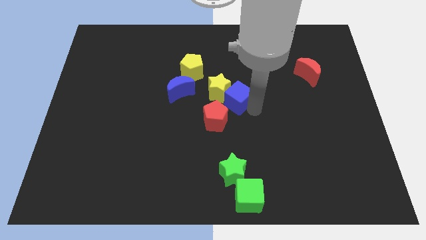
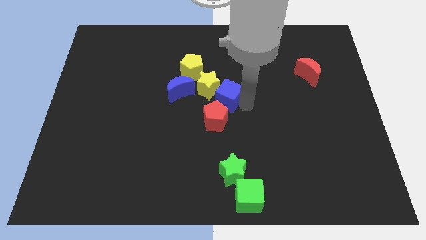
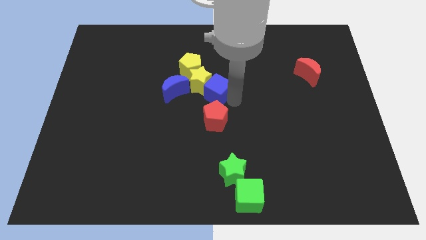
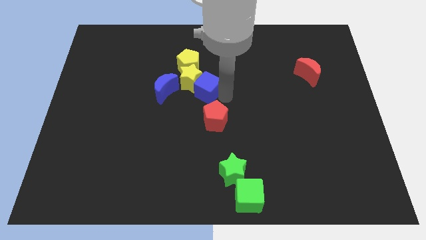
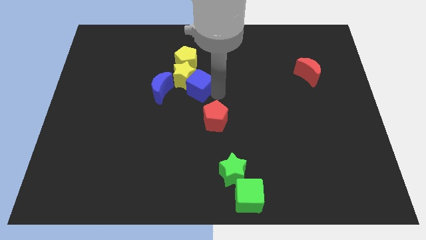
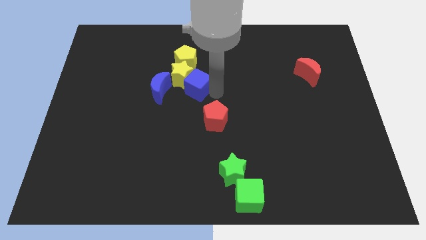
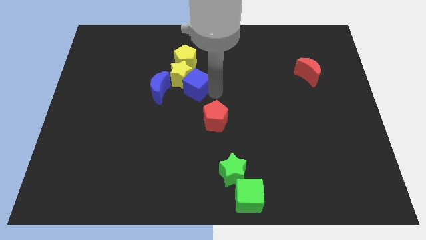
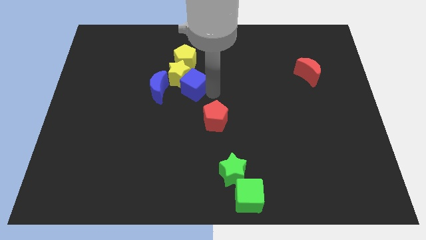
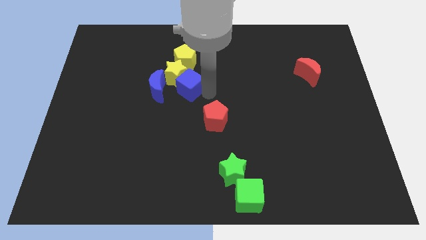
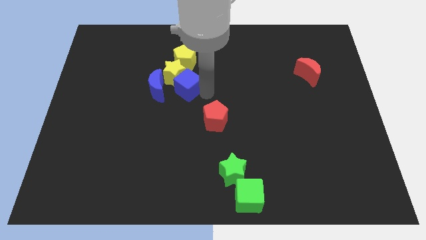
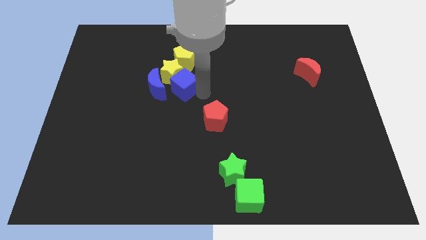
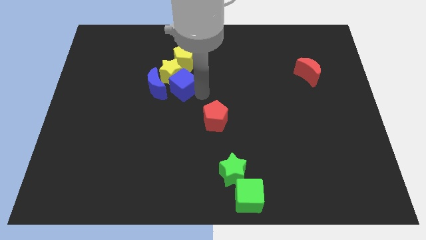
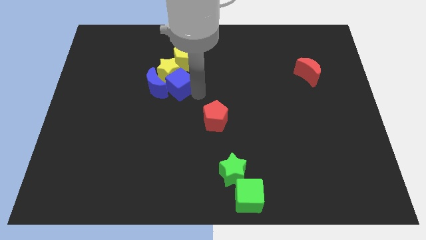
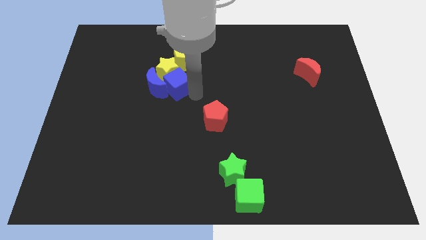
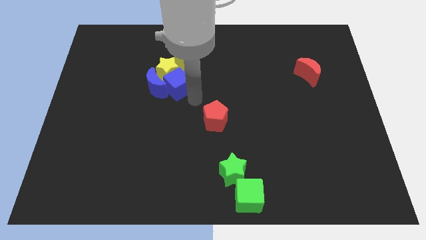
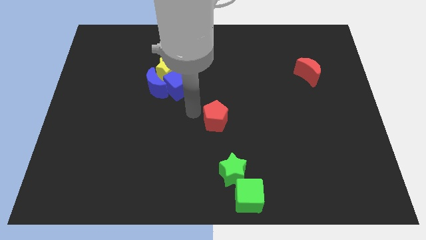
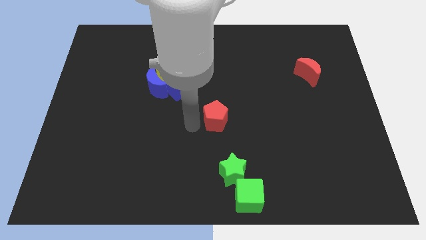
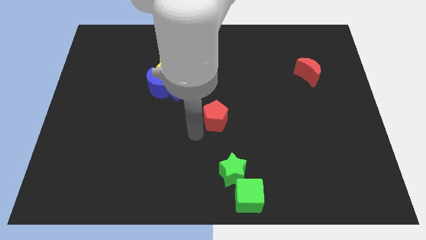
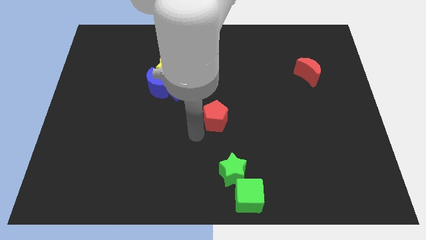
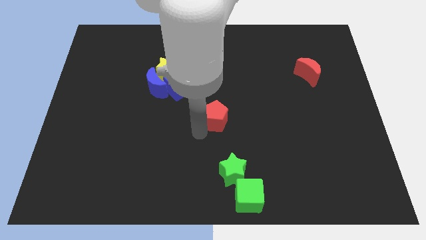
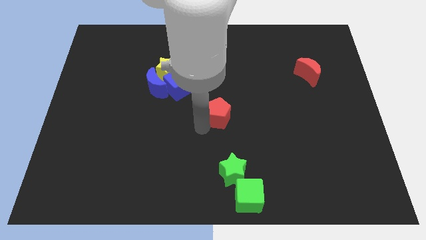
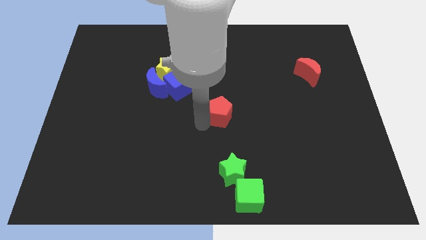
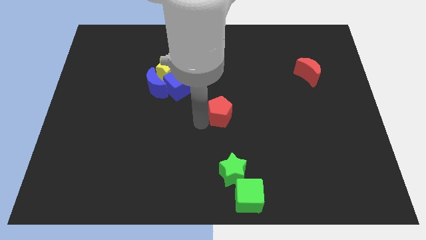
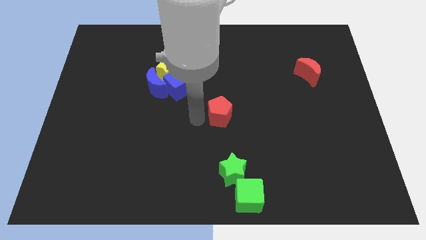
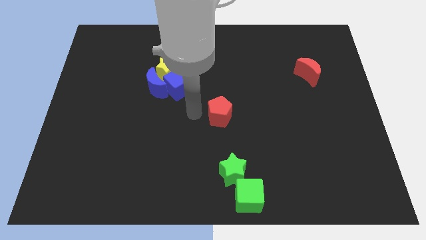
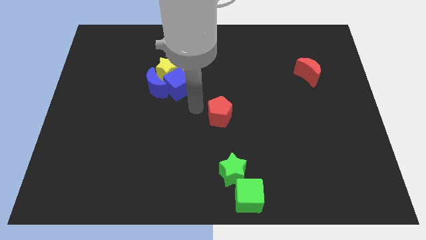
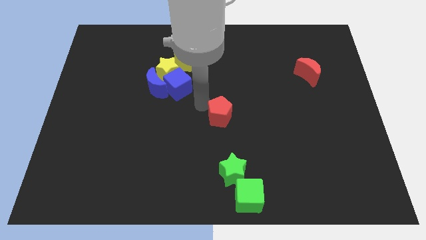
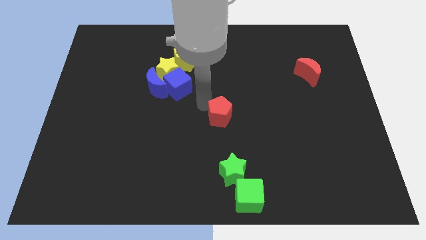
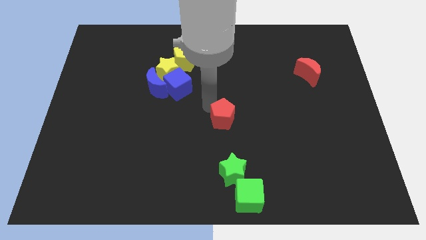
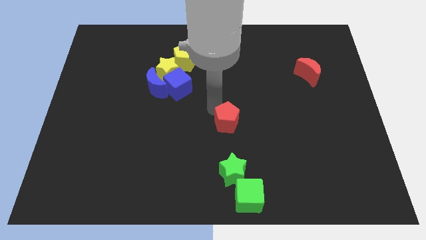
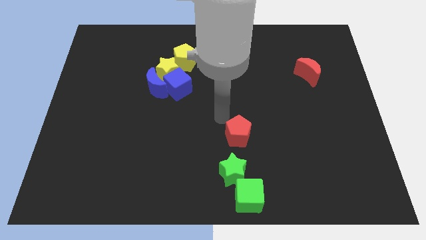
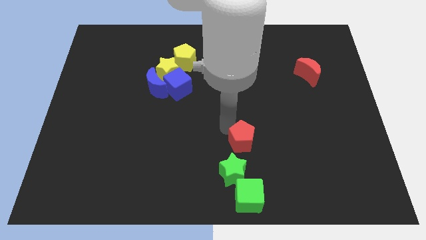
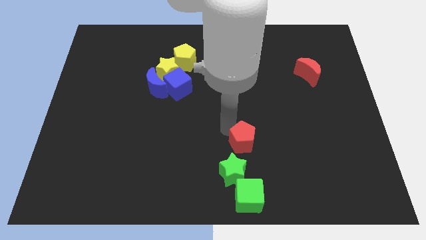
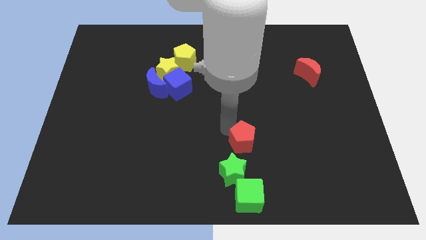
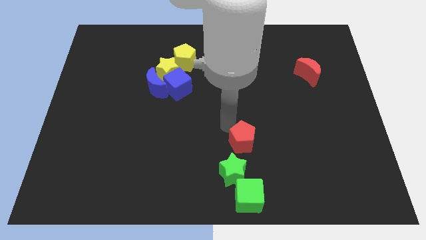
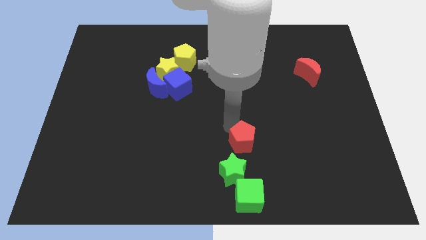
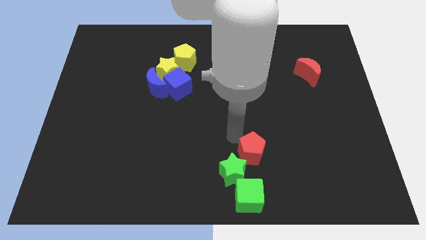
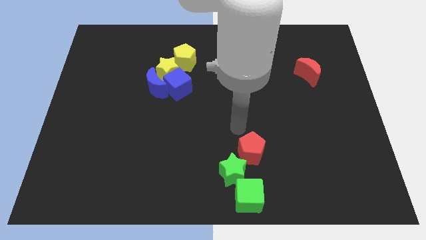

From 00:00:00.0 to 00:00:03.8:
push the red pentagon diagonal to the green star

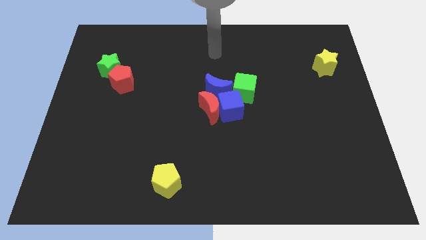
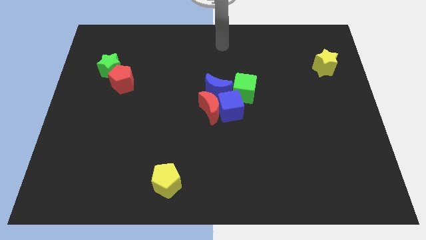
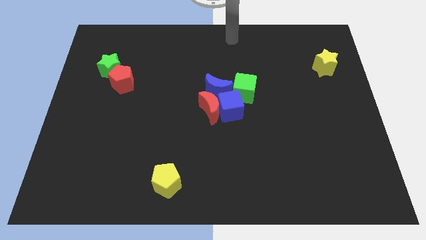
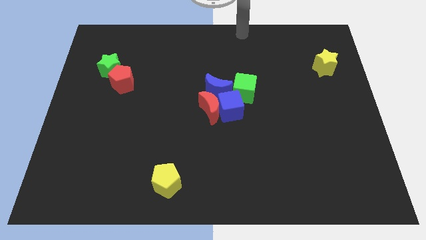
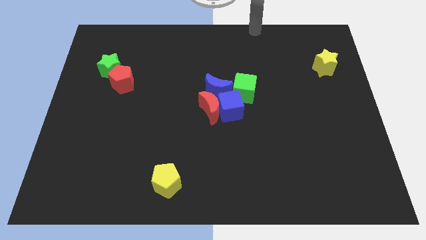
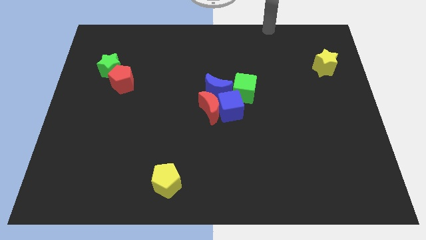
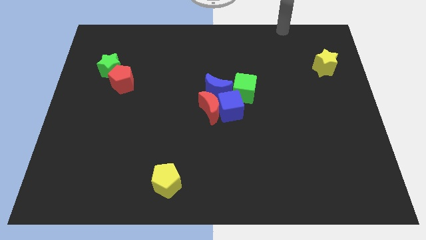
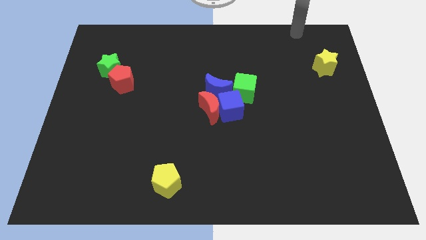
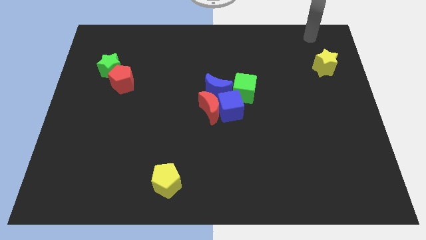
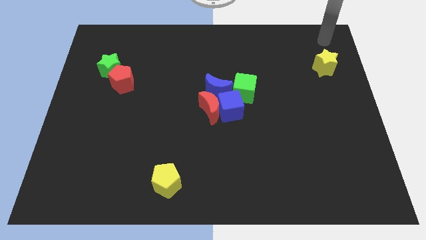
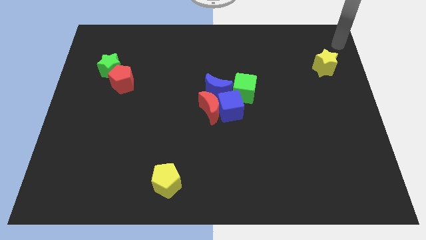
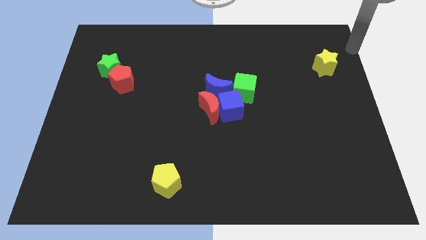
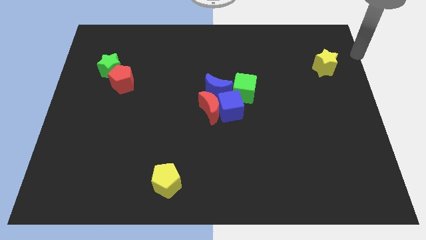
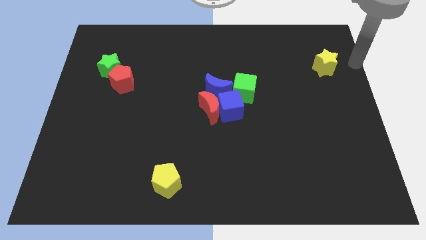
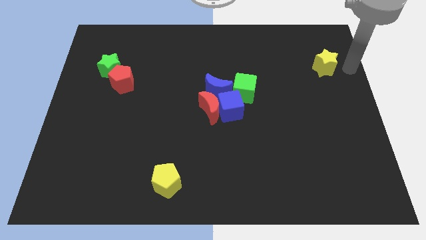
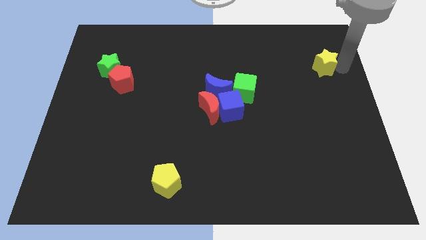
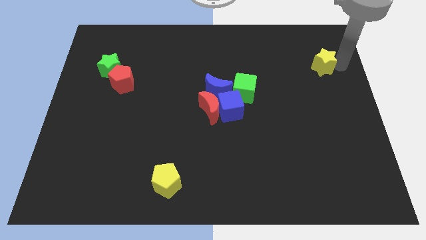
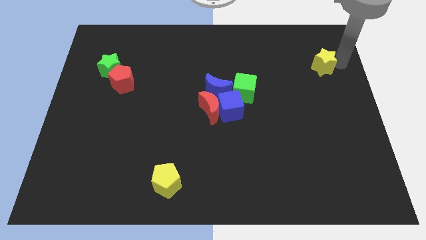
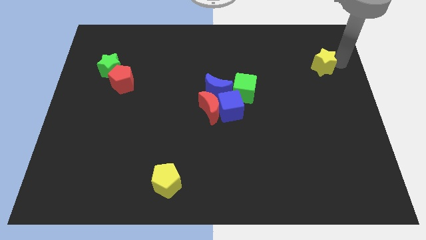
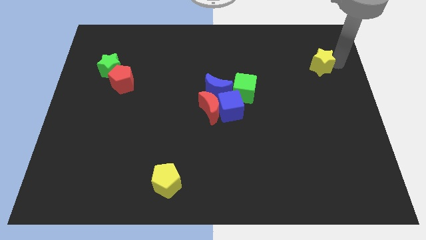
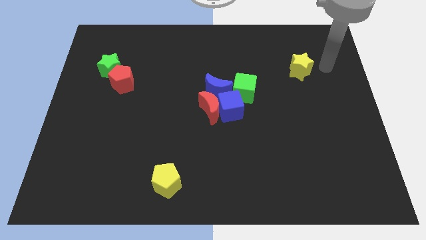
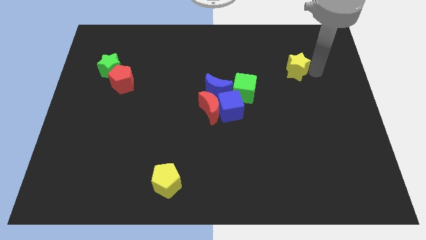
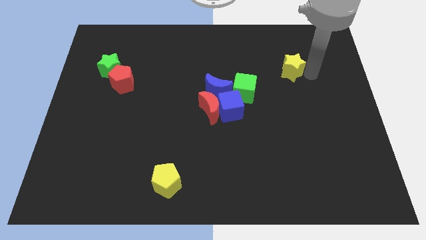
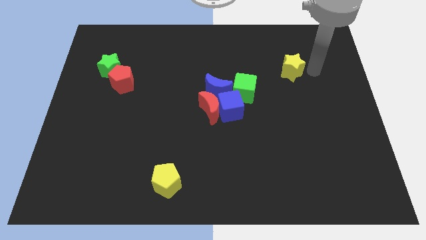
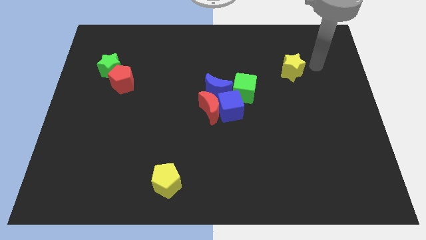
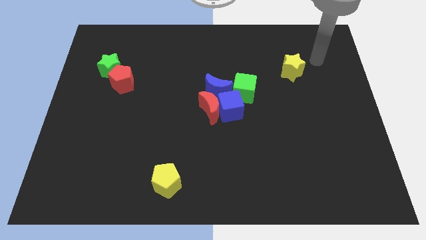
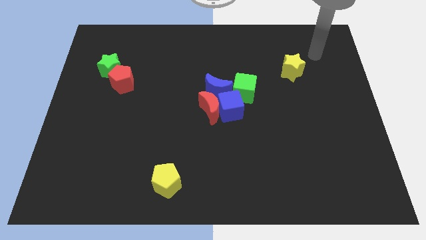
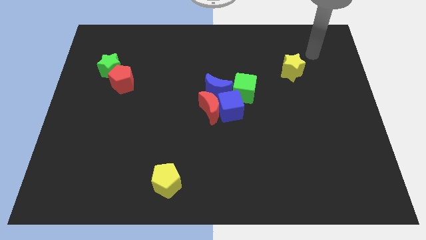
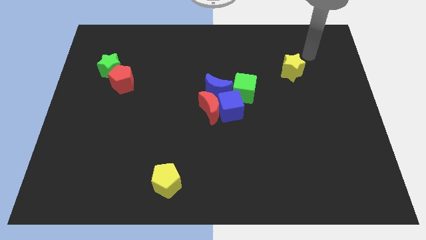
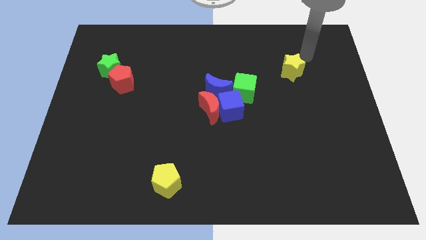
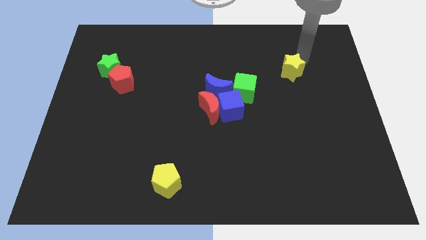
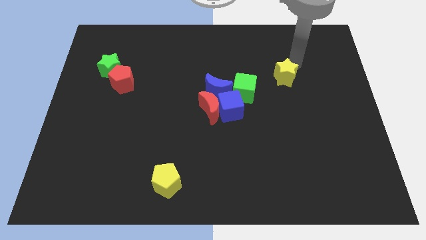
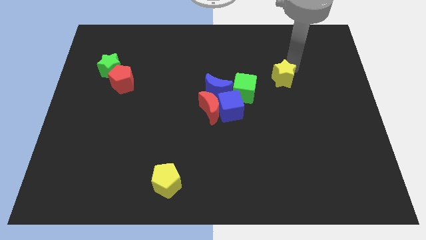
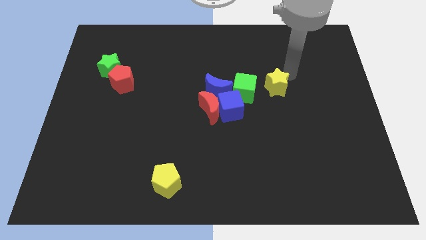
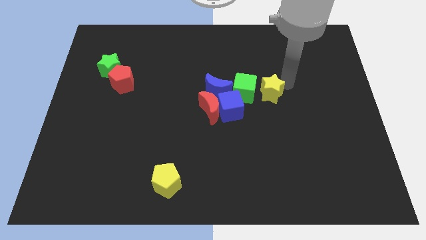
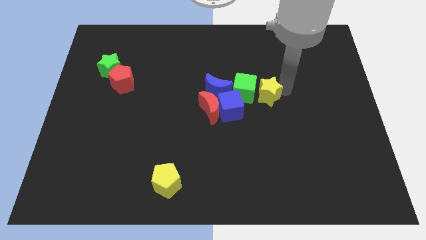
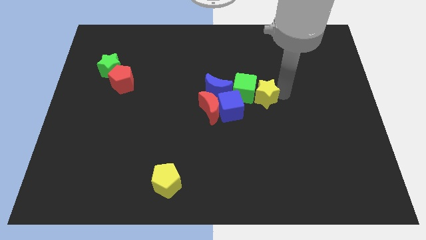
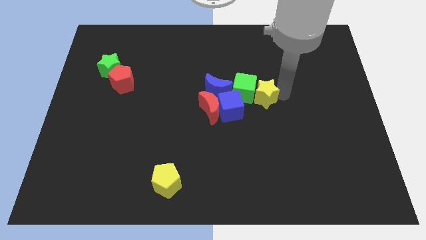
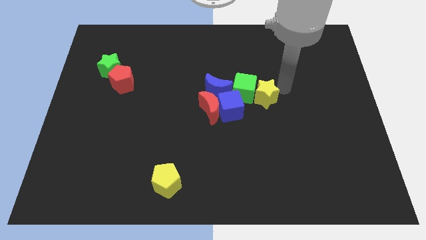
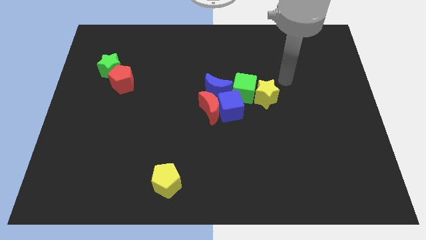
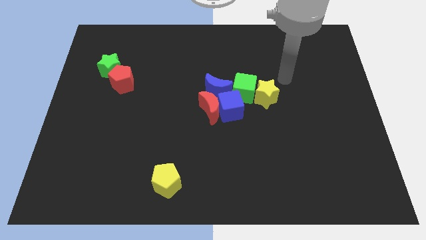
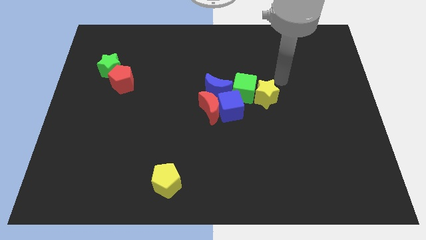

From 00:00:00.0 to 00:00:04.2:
push the yellow star into the green cube

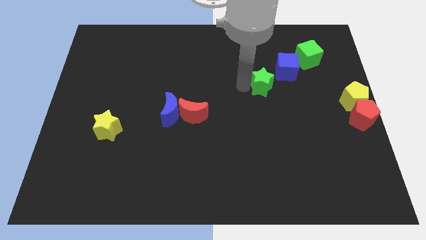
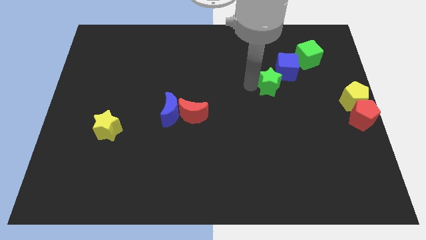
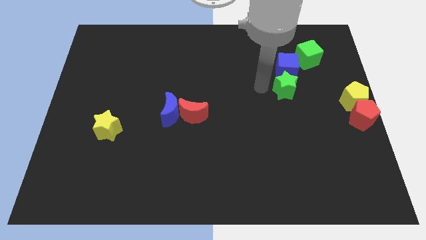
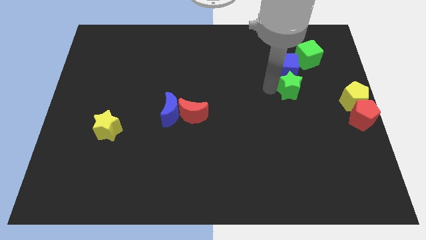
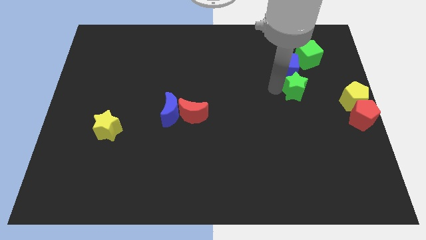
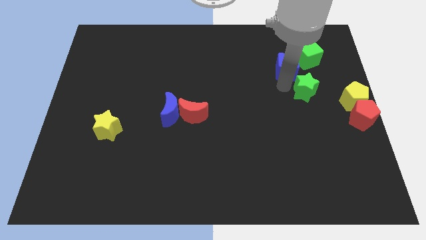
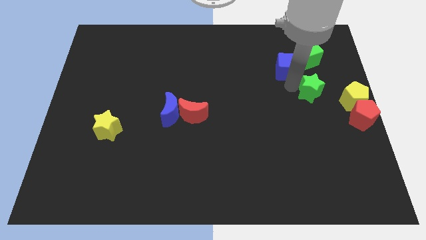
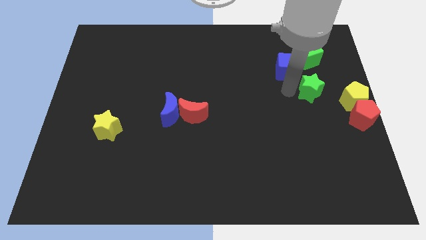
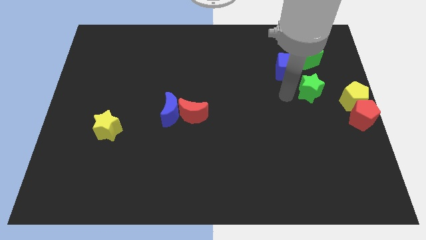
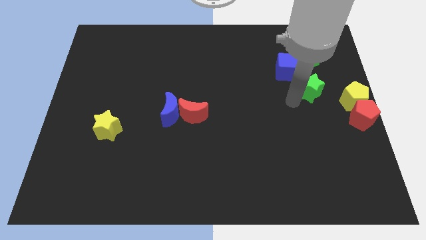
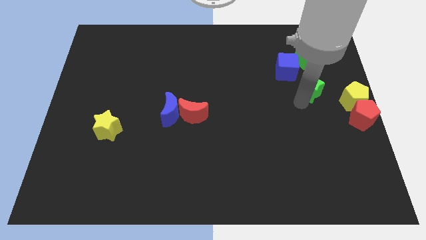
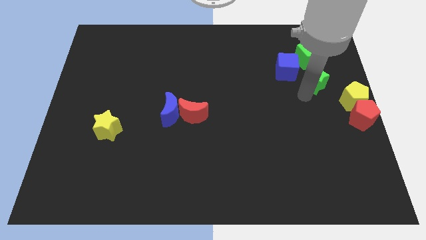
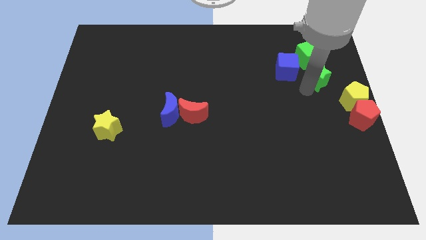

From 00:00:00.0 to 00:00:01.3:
push the green star towards the bottom right side of the green cube
